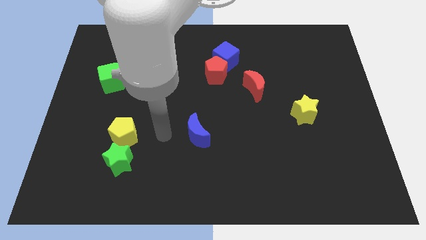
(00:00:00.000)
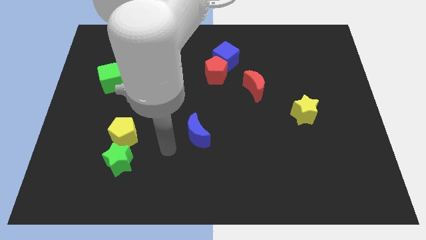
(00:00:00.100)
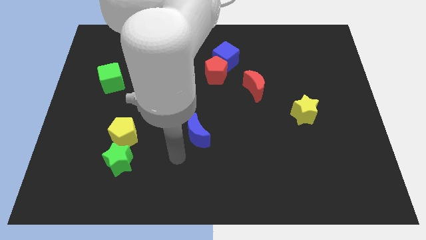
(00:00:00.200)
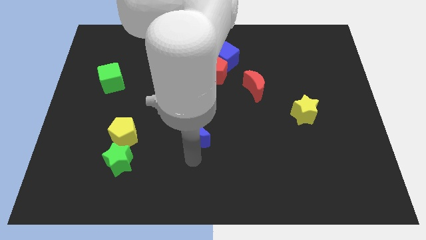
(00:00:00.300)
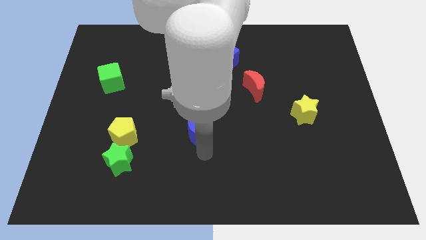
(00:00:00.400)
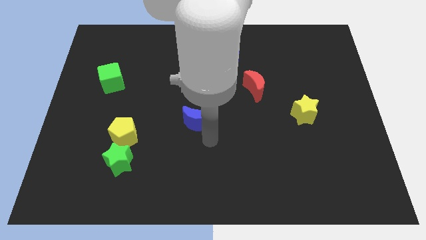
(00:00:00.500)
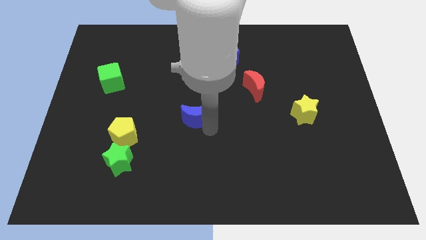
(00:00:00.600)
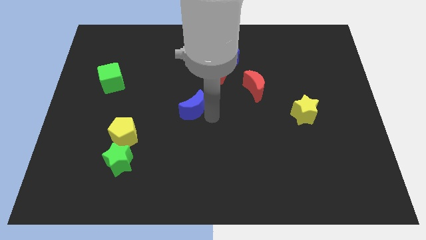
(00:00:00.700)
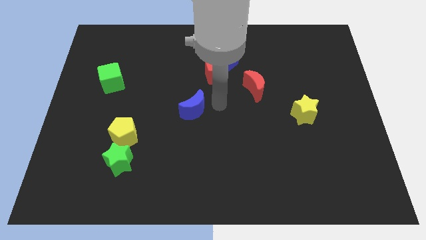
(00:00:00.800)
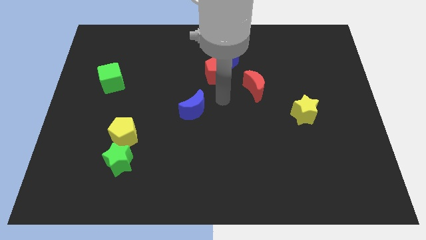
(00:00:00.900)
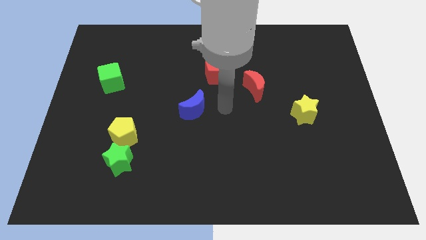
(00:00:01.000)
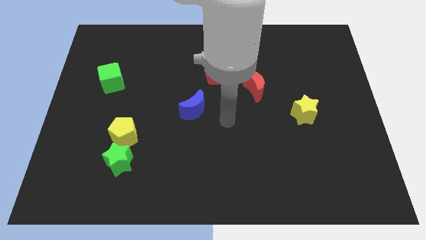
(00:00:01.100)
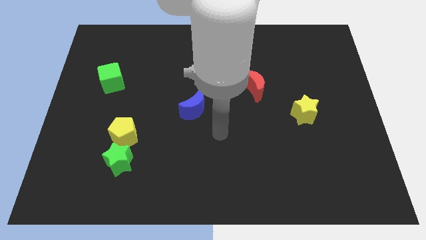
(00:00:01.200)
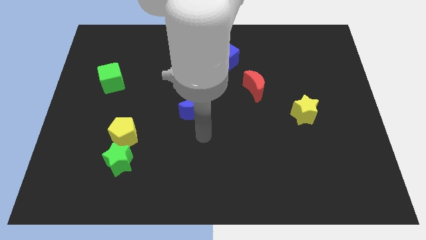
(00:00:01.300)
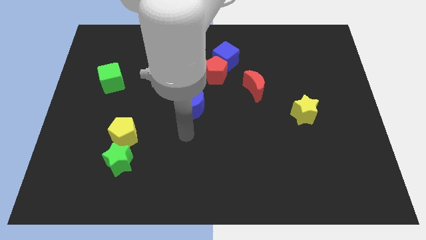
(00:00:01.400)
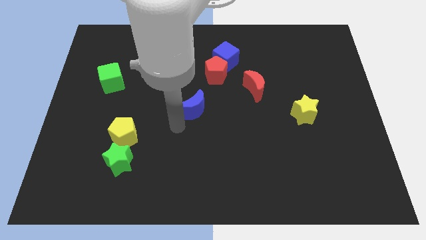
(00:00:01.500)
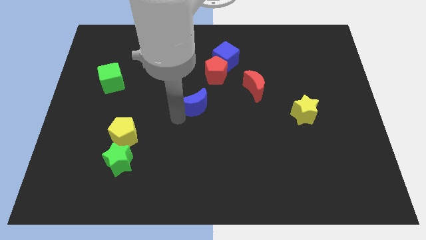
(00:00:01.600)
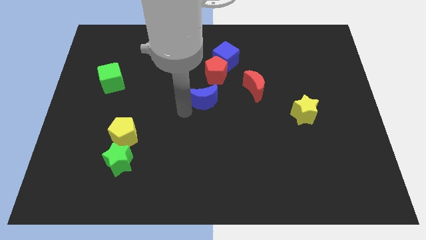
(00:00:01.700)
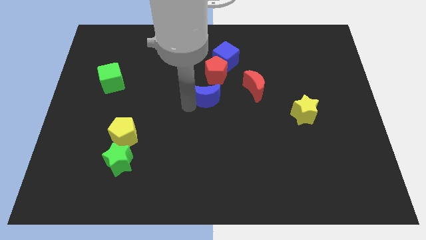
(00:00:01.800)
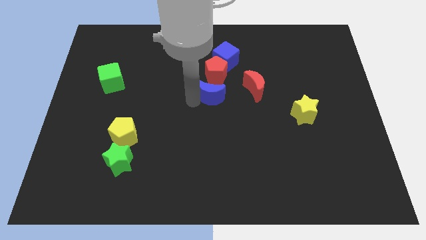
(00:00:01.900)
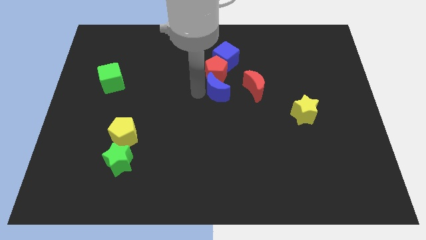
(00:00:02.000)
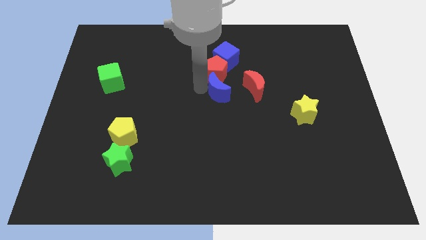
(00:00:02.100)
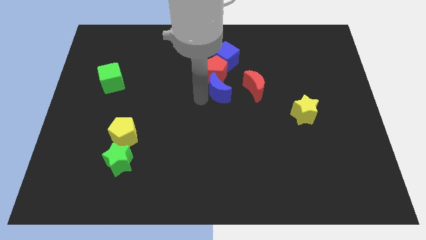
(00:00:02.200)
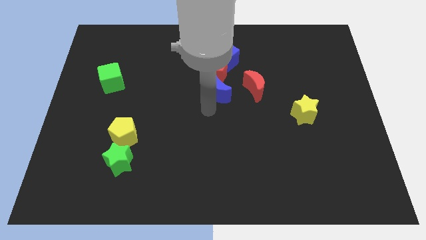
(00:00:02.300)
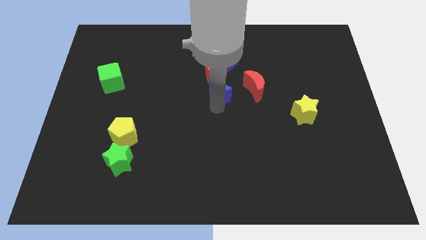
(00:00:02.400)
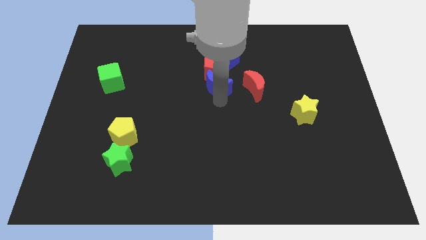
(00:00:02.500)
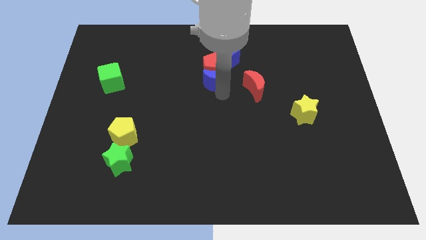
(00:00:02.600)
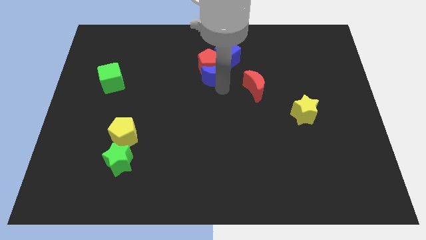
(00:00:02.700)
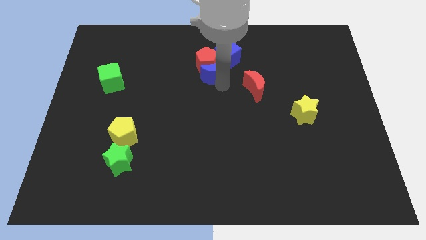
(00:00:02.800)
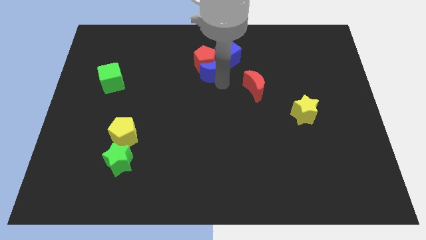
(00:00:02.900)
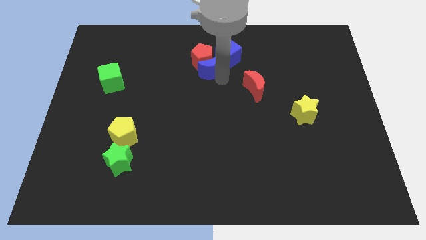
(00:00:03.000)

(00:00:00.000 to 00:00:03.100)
push the blue moon into the red pentagon

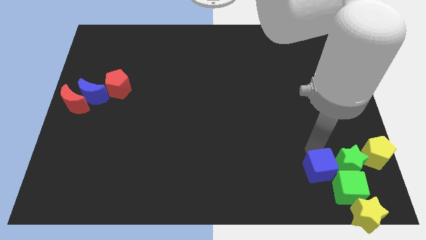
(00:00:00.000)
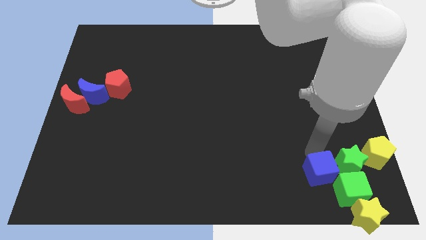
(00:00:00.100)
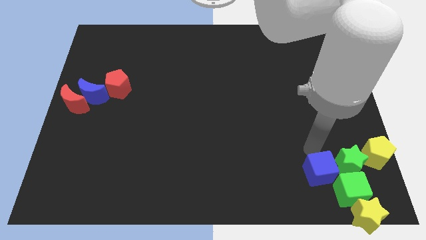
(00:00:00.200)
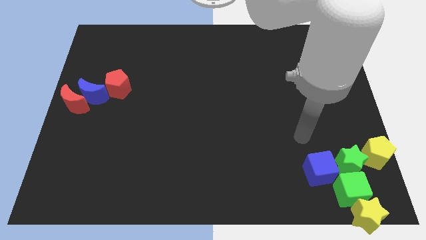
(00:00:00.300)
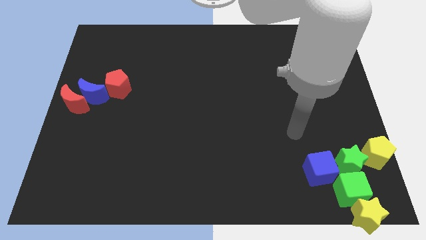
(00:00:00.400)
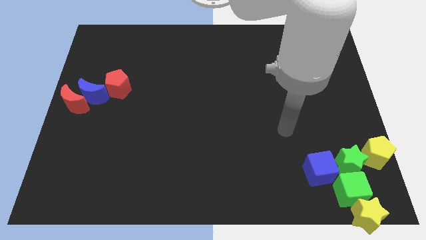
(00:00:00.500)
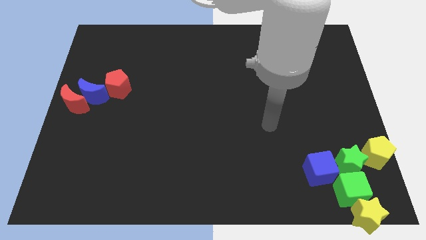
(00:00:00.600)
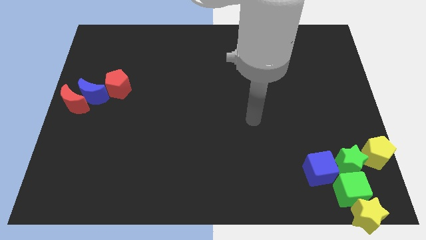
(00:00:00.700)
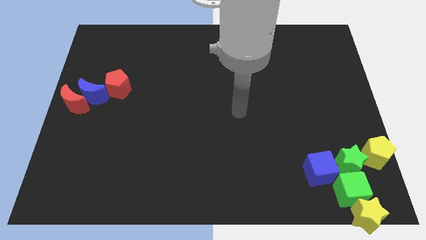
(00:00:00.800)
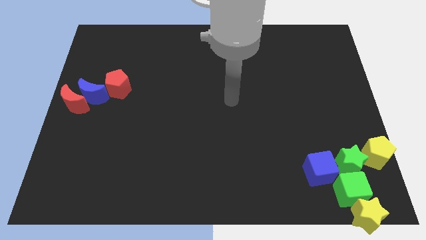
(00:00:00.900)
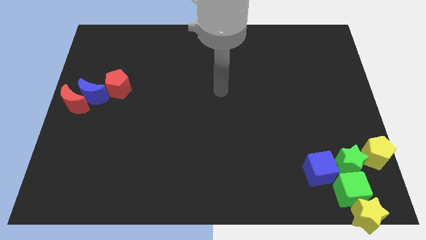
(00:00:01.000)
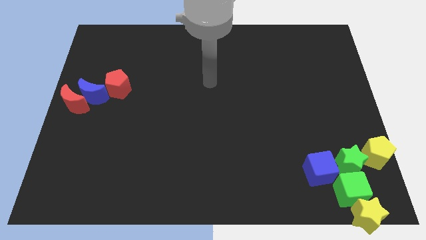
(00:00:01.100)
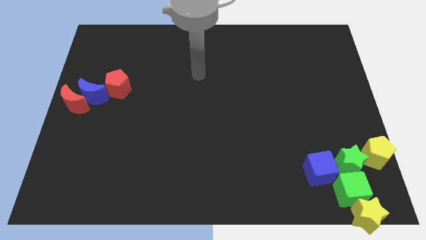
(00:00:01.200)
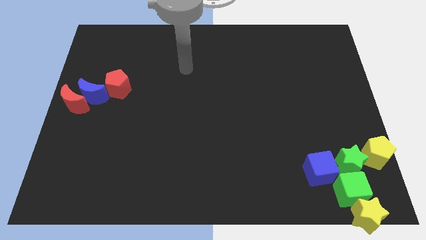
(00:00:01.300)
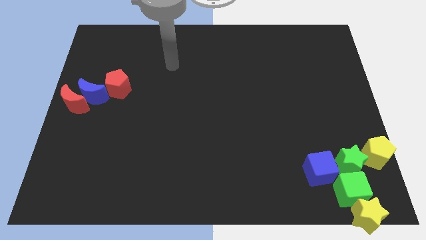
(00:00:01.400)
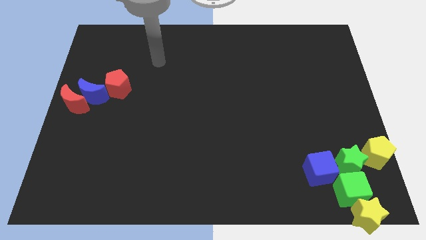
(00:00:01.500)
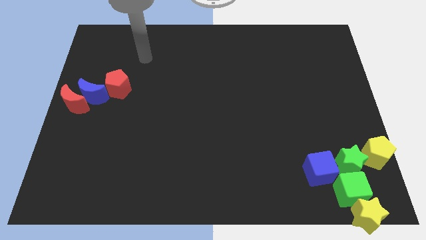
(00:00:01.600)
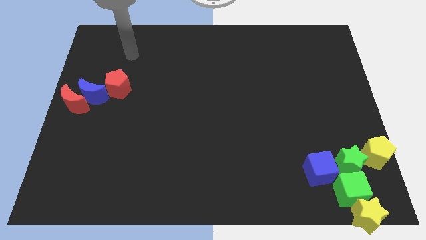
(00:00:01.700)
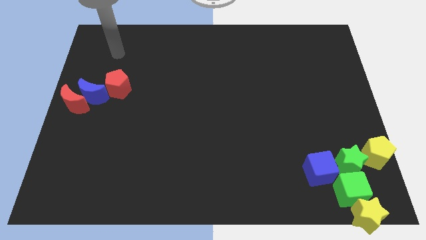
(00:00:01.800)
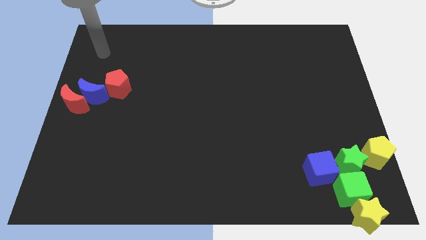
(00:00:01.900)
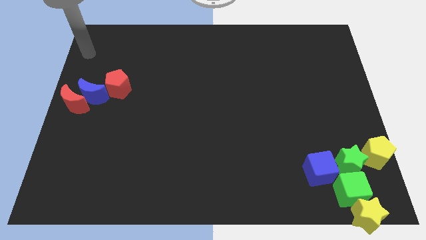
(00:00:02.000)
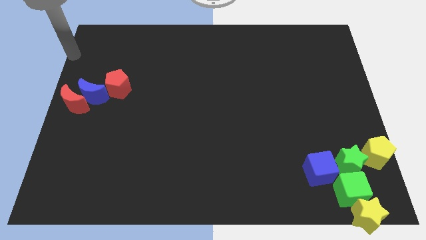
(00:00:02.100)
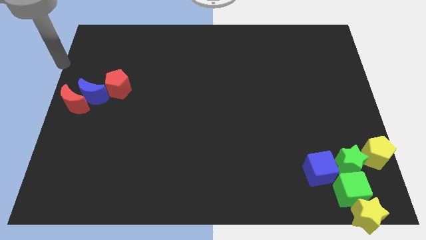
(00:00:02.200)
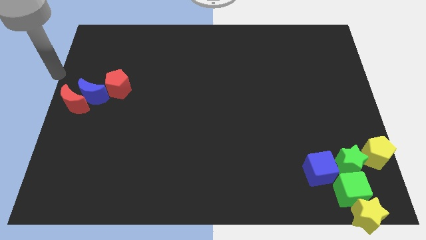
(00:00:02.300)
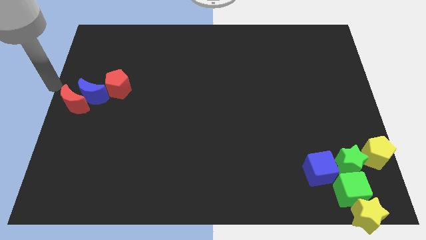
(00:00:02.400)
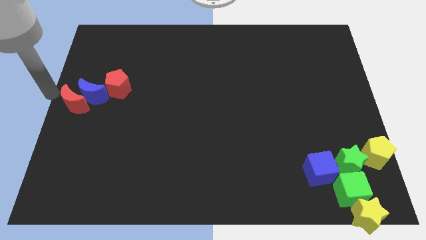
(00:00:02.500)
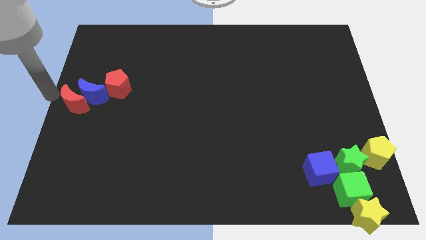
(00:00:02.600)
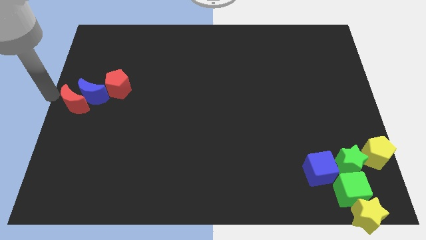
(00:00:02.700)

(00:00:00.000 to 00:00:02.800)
move your arm away from the blue cube

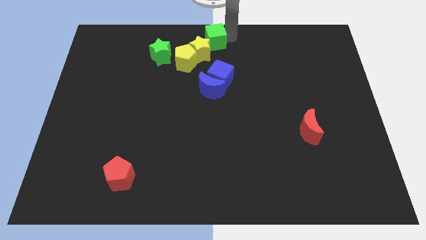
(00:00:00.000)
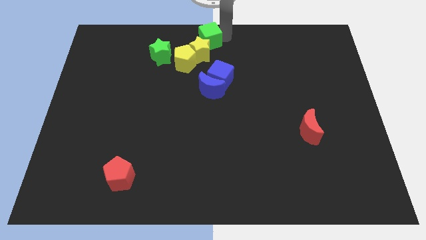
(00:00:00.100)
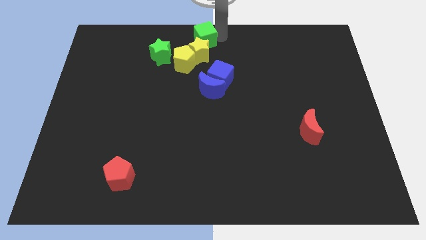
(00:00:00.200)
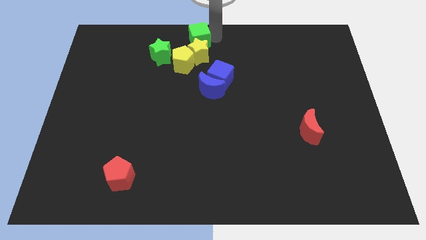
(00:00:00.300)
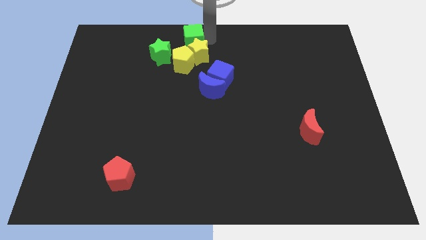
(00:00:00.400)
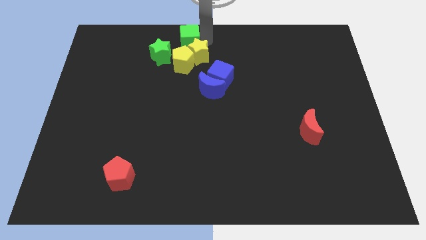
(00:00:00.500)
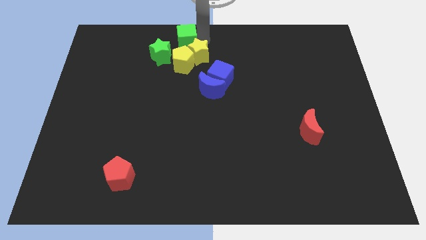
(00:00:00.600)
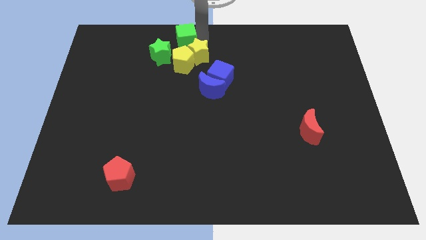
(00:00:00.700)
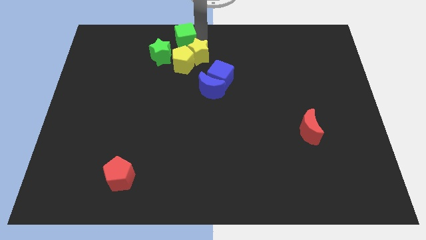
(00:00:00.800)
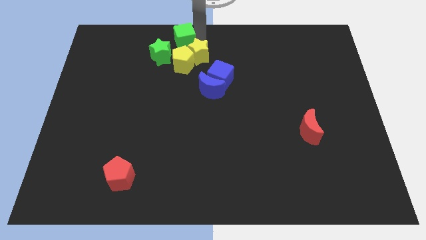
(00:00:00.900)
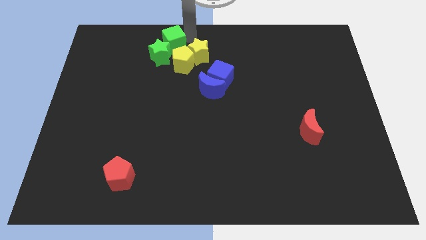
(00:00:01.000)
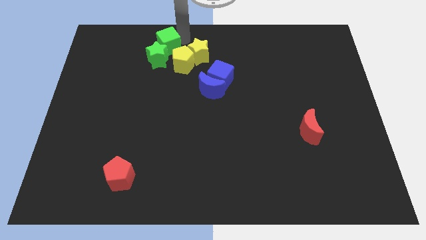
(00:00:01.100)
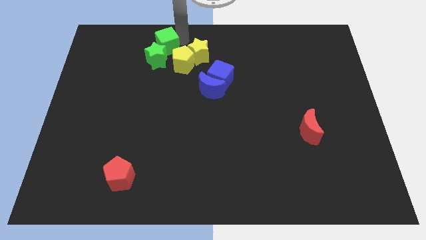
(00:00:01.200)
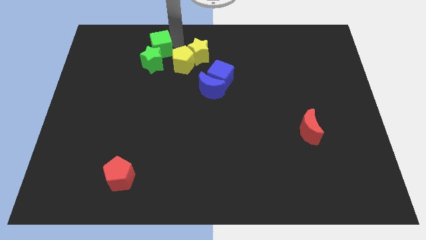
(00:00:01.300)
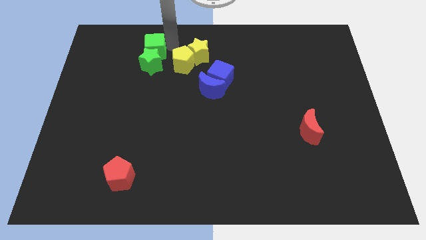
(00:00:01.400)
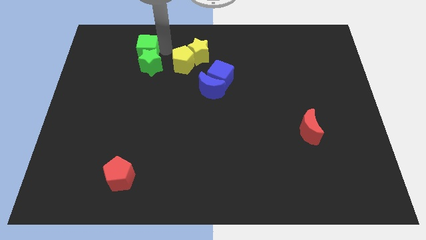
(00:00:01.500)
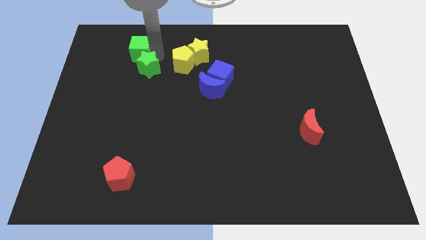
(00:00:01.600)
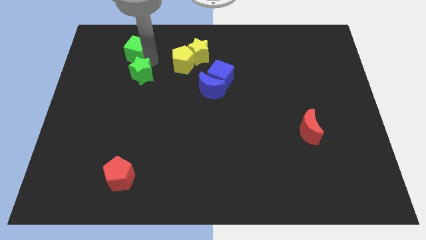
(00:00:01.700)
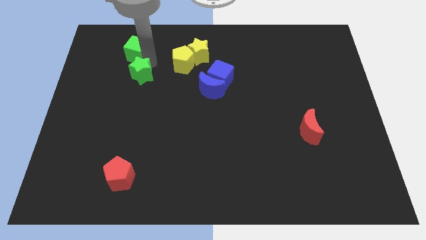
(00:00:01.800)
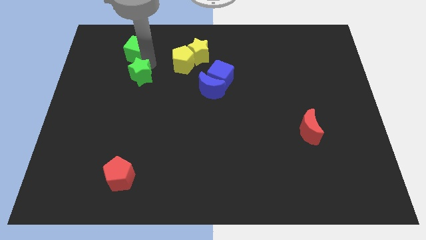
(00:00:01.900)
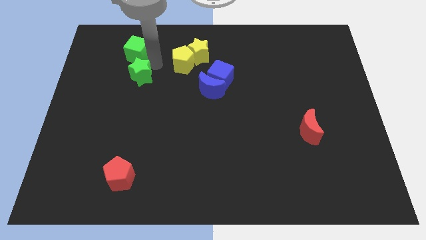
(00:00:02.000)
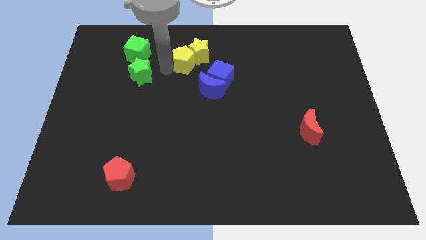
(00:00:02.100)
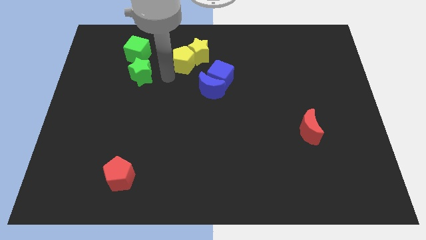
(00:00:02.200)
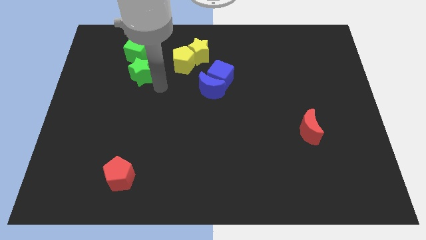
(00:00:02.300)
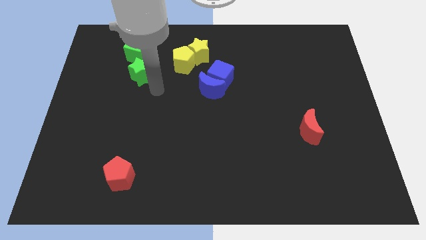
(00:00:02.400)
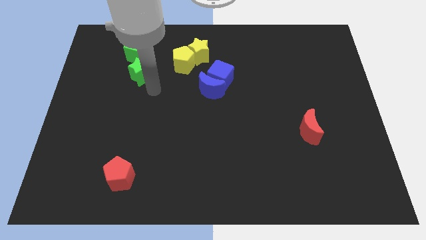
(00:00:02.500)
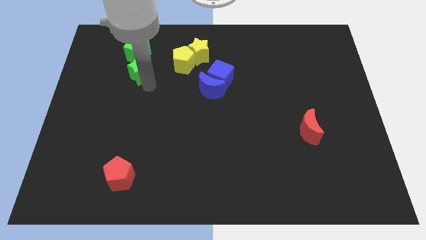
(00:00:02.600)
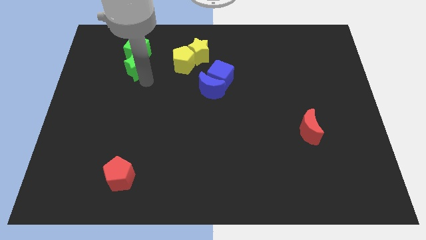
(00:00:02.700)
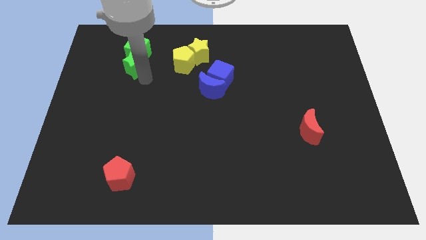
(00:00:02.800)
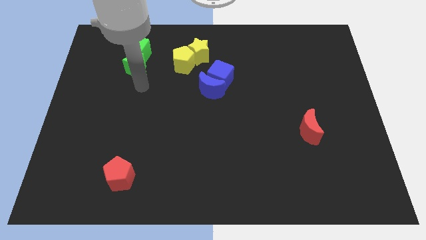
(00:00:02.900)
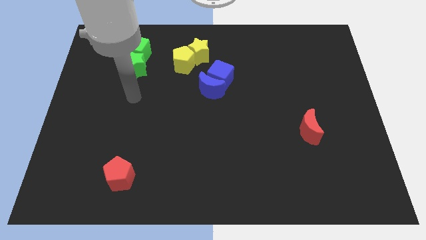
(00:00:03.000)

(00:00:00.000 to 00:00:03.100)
place green cube and green star together
